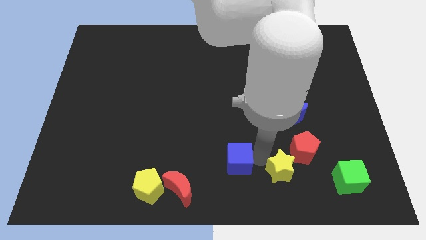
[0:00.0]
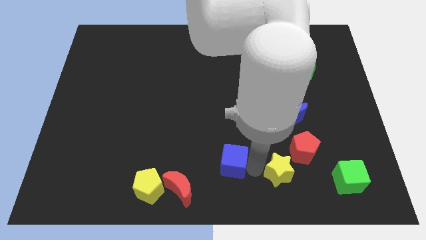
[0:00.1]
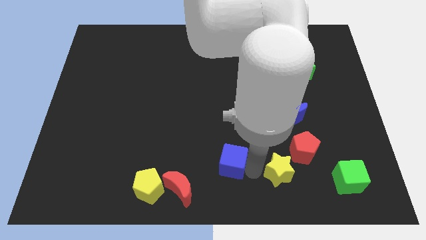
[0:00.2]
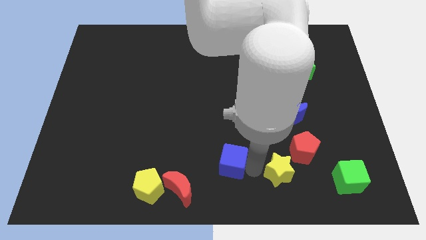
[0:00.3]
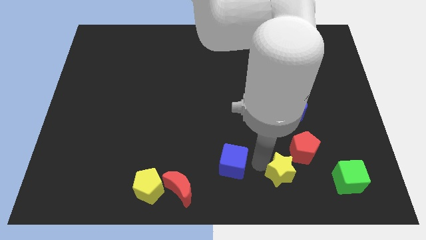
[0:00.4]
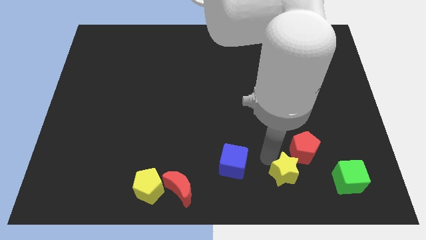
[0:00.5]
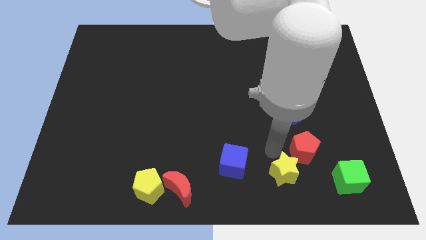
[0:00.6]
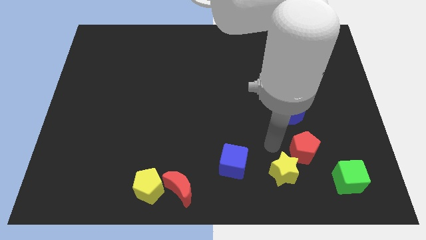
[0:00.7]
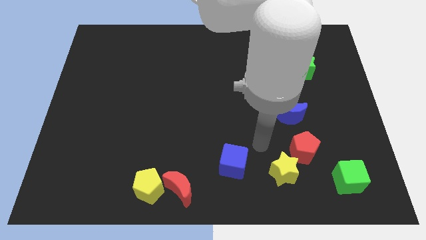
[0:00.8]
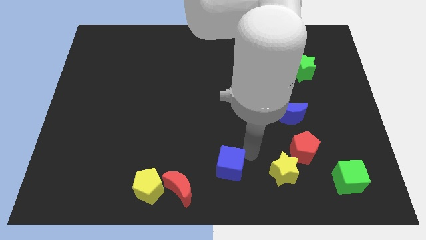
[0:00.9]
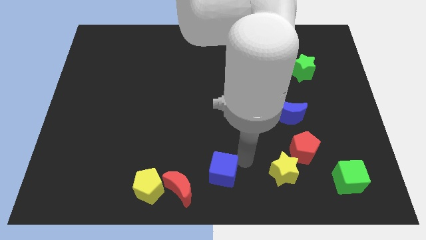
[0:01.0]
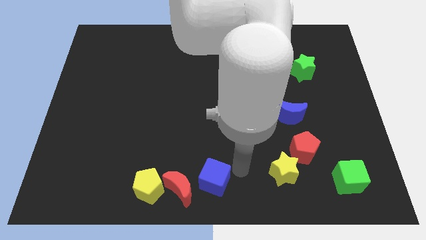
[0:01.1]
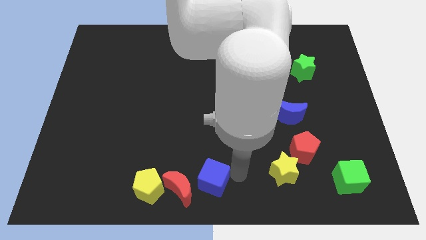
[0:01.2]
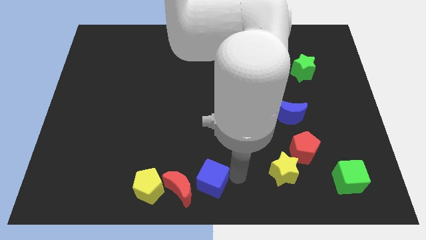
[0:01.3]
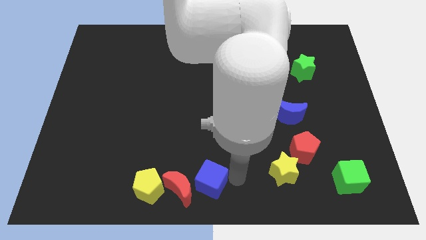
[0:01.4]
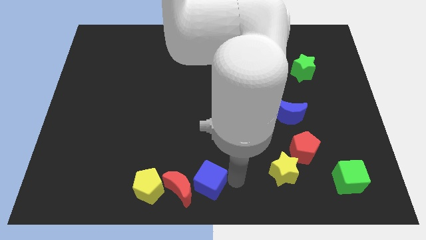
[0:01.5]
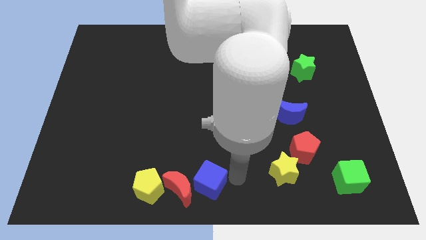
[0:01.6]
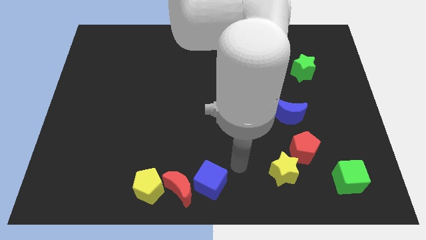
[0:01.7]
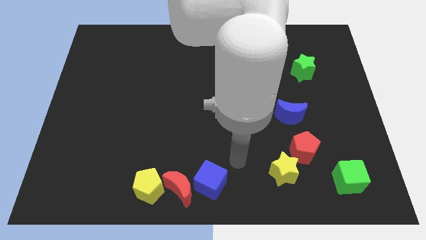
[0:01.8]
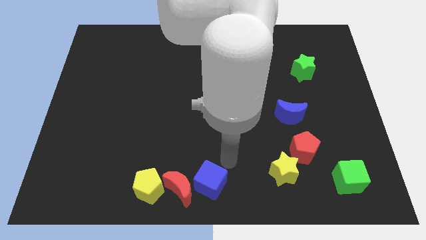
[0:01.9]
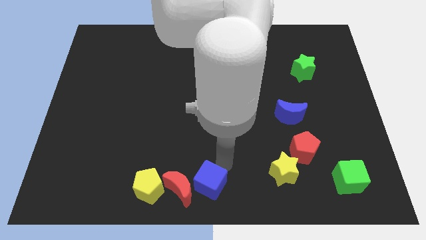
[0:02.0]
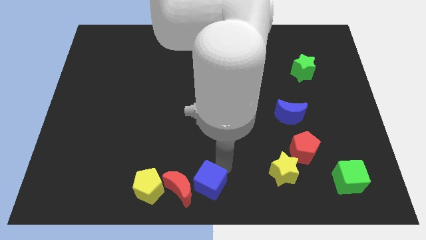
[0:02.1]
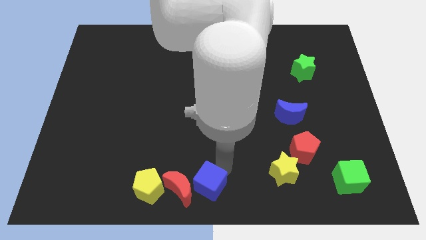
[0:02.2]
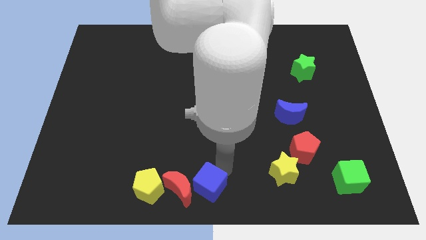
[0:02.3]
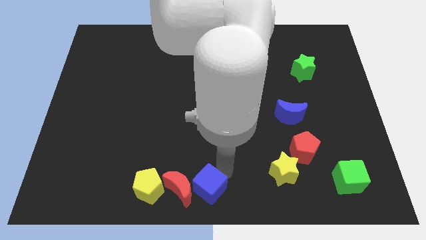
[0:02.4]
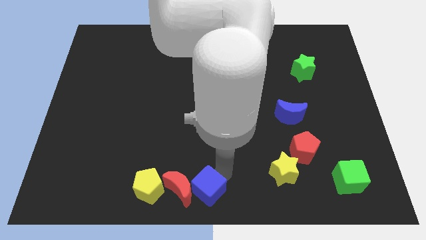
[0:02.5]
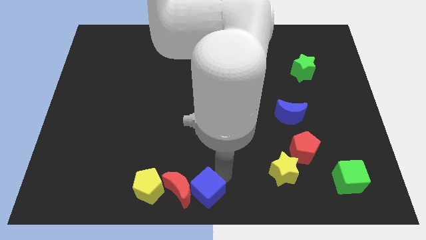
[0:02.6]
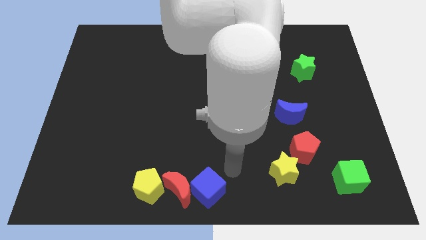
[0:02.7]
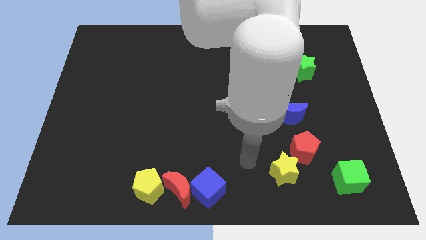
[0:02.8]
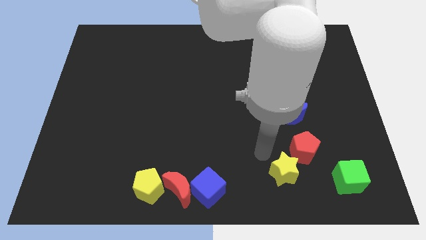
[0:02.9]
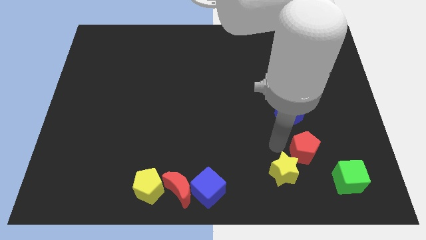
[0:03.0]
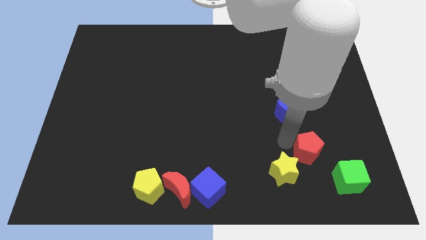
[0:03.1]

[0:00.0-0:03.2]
push the blue cube right to the red moon

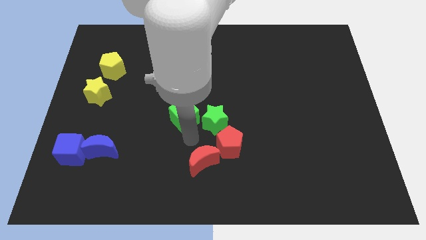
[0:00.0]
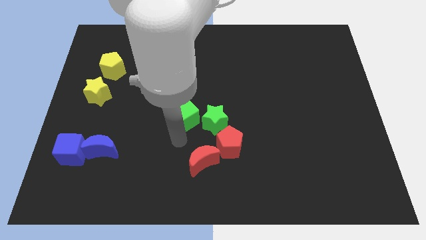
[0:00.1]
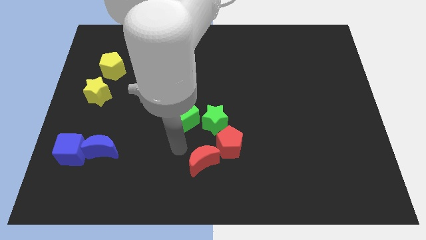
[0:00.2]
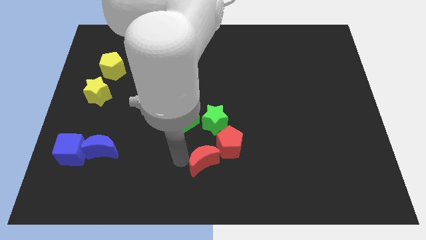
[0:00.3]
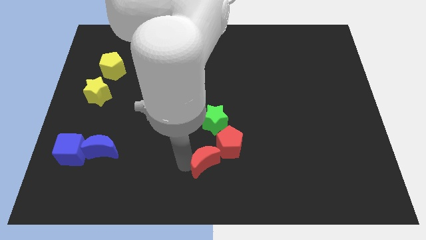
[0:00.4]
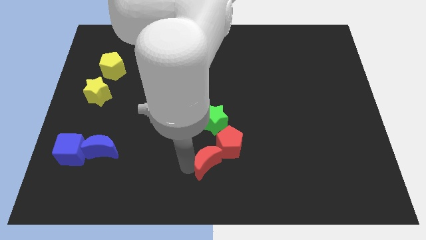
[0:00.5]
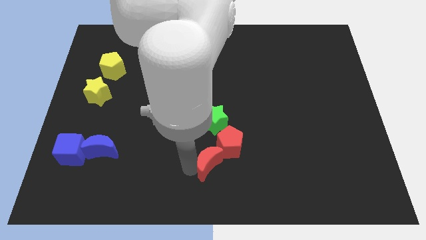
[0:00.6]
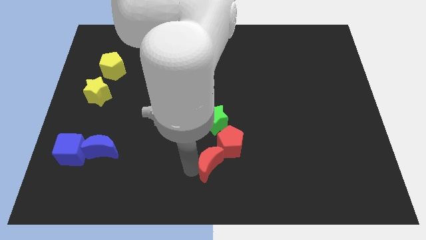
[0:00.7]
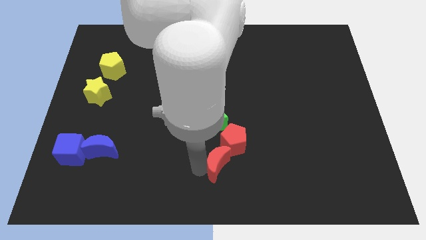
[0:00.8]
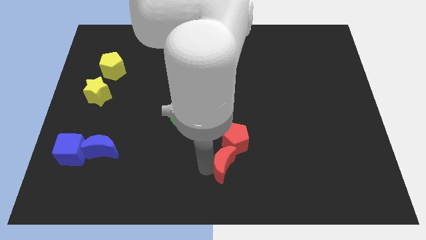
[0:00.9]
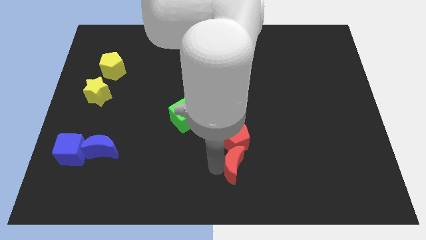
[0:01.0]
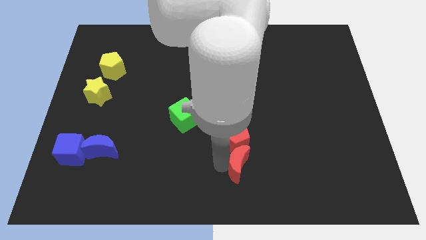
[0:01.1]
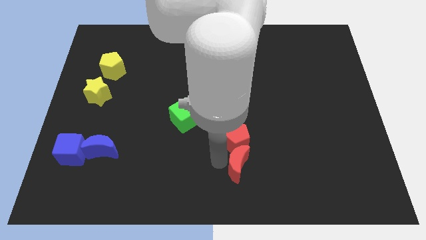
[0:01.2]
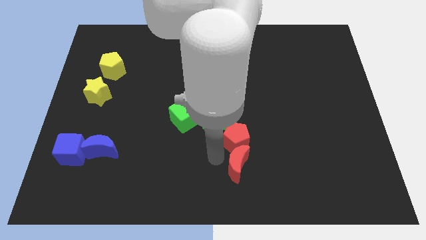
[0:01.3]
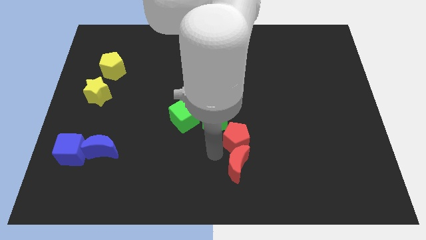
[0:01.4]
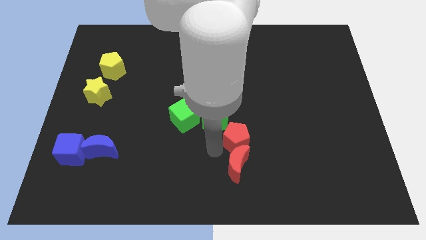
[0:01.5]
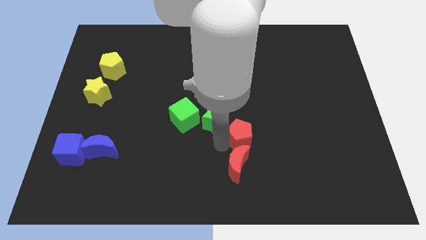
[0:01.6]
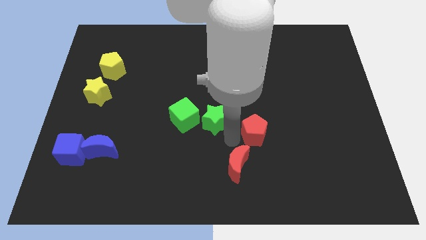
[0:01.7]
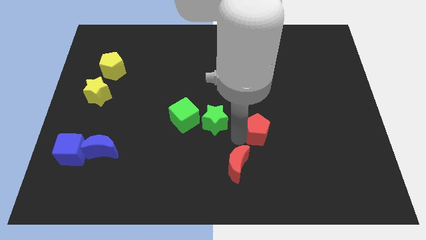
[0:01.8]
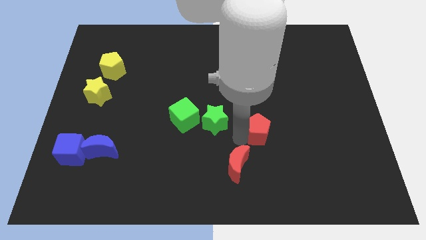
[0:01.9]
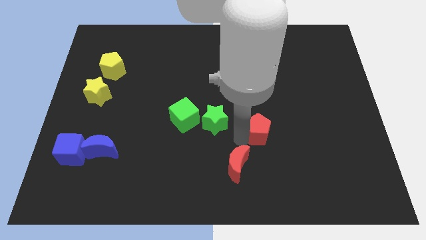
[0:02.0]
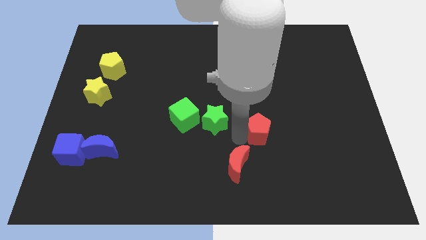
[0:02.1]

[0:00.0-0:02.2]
move the red crescent to the bottom of the red pentagon

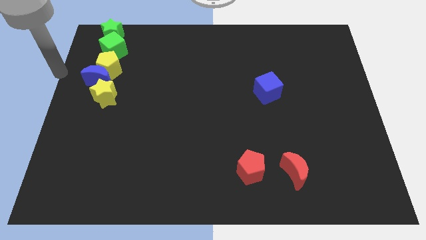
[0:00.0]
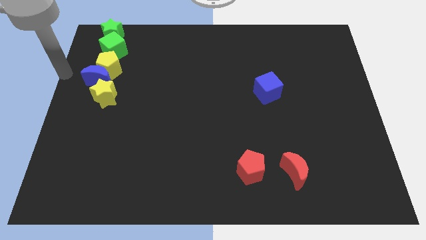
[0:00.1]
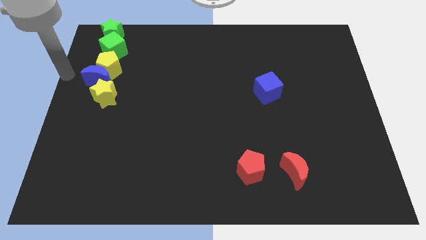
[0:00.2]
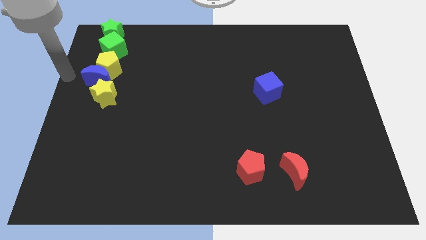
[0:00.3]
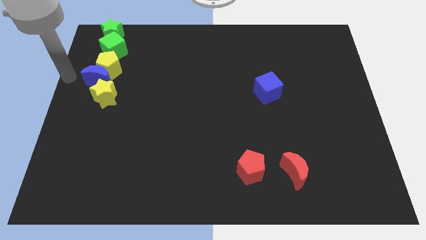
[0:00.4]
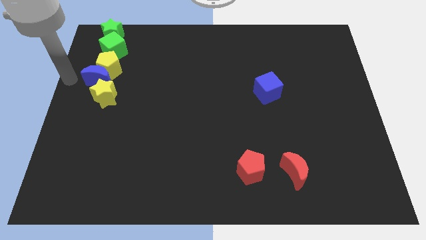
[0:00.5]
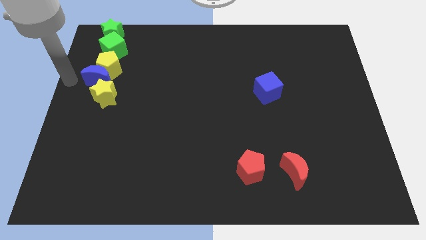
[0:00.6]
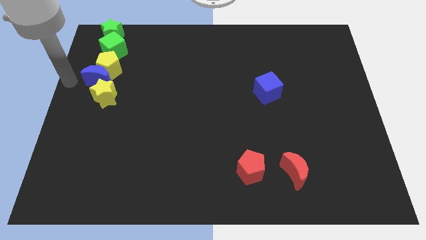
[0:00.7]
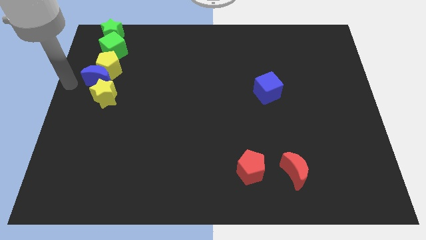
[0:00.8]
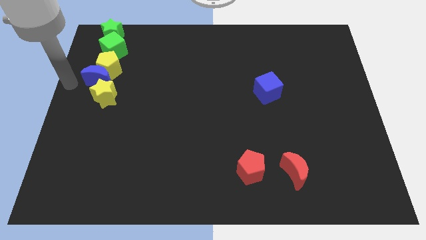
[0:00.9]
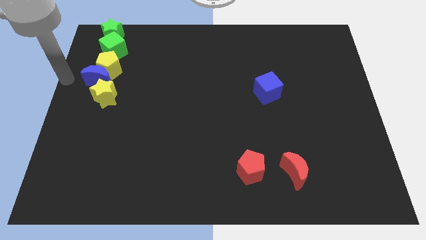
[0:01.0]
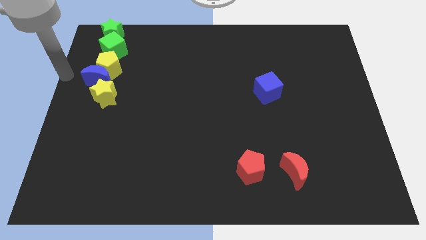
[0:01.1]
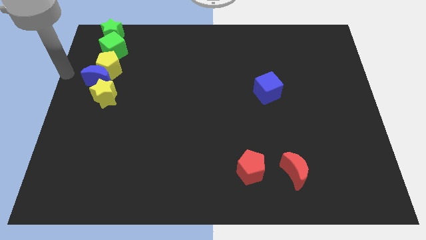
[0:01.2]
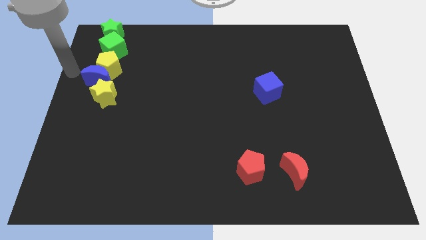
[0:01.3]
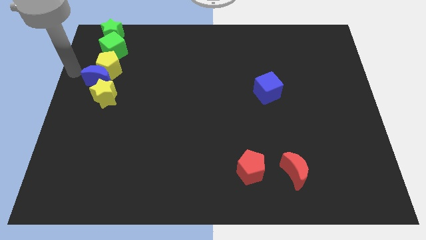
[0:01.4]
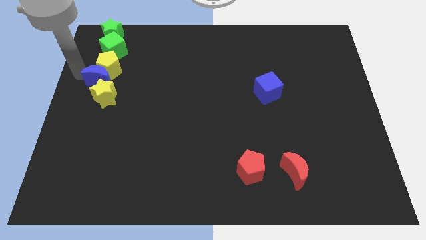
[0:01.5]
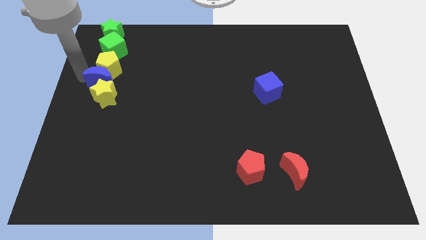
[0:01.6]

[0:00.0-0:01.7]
place arm close to blue crescent

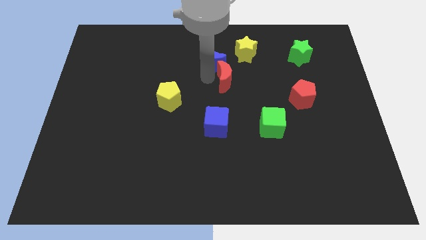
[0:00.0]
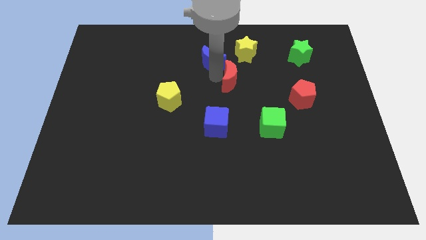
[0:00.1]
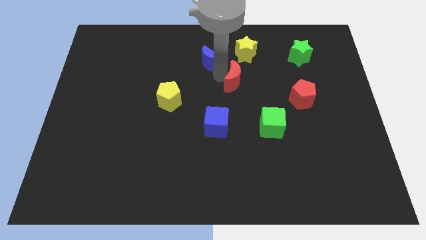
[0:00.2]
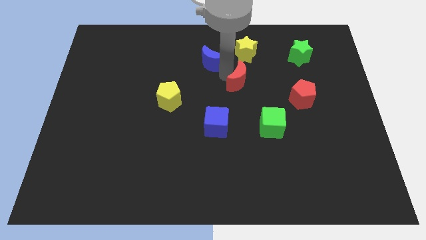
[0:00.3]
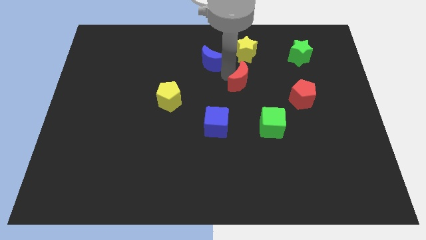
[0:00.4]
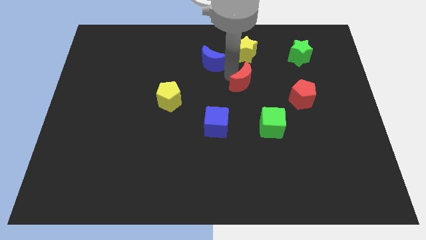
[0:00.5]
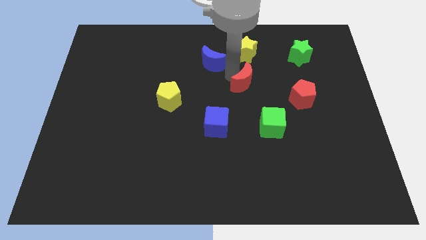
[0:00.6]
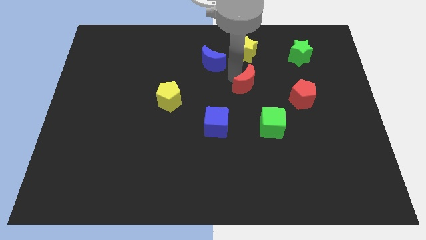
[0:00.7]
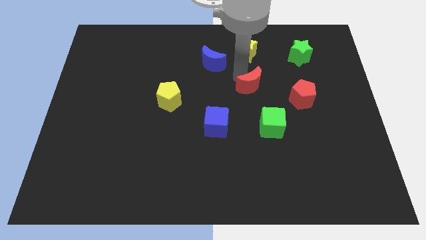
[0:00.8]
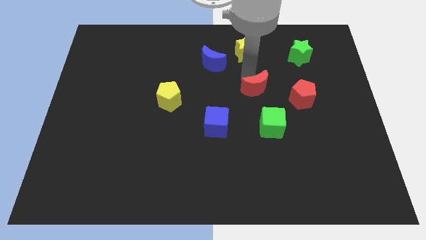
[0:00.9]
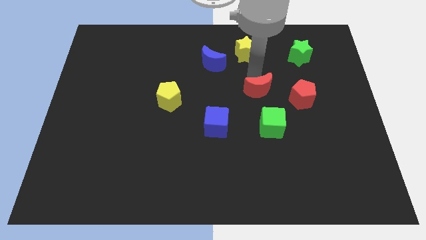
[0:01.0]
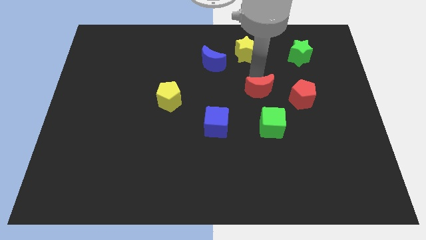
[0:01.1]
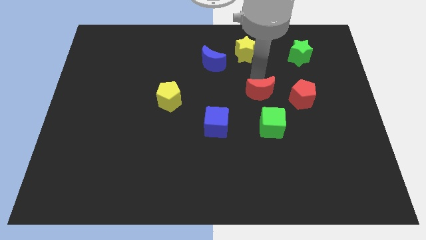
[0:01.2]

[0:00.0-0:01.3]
place the red moon above the green cube

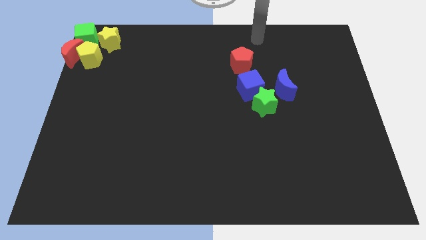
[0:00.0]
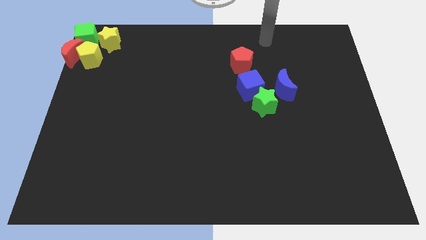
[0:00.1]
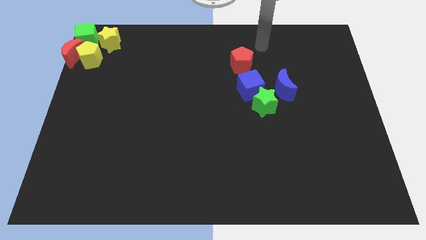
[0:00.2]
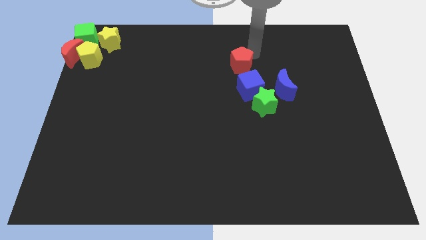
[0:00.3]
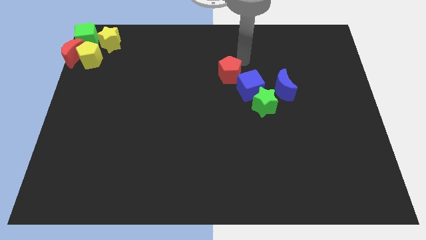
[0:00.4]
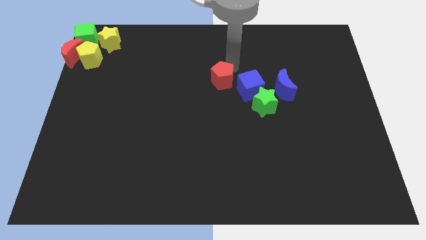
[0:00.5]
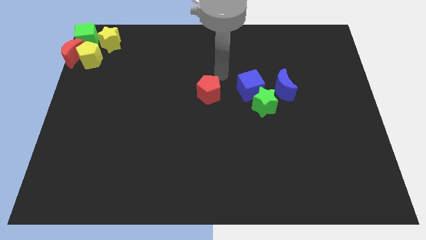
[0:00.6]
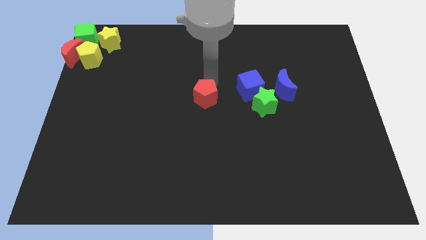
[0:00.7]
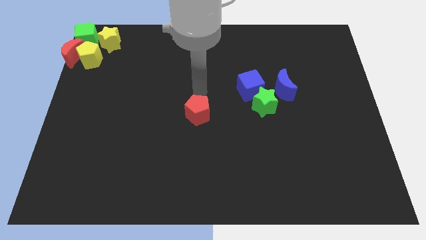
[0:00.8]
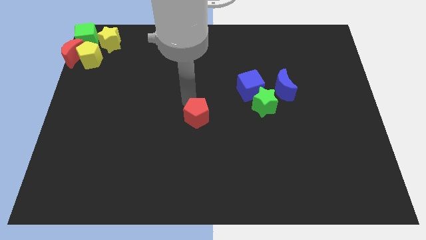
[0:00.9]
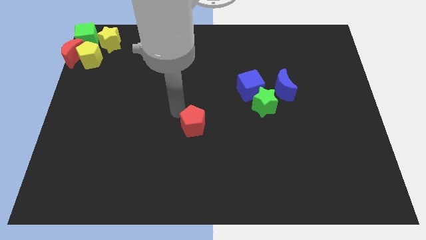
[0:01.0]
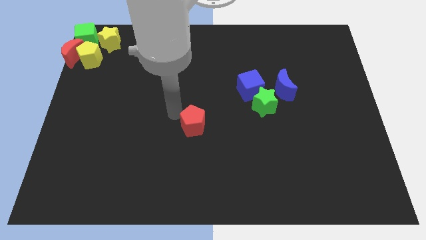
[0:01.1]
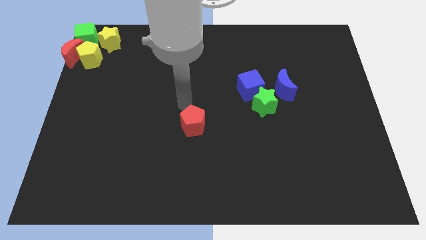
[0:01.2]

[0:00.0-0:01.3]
drag the red pentagon towards the bottom side of the board
